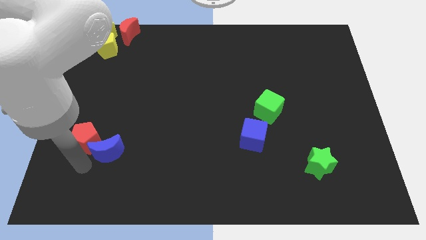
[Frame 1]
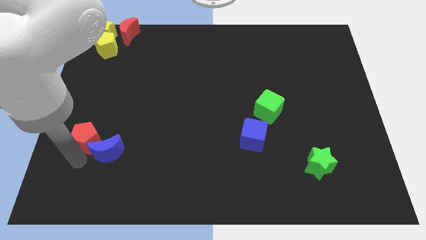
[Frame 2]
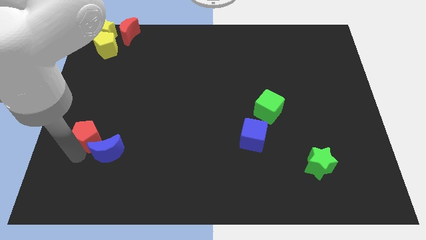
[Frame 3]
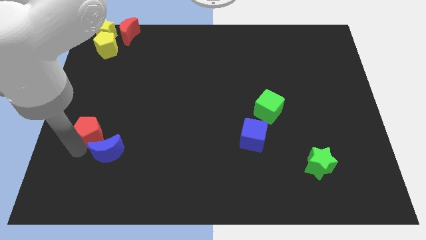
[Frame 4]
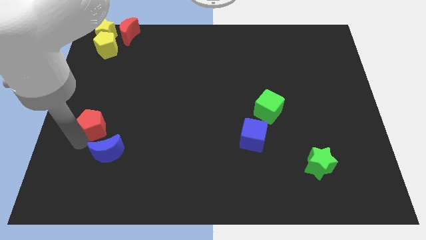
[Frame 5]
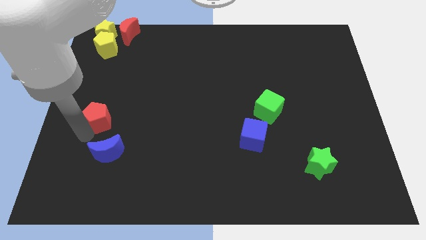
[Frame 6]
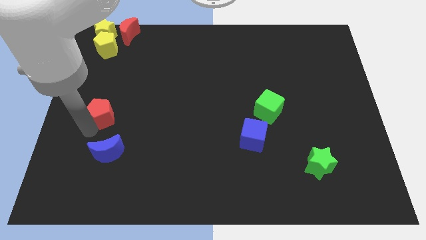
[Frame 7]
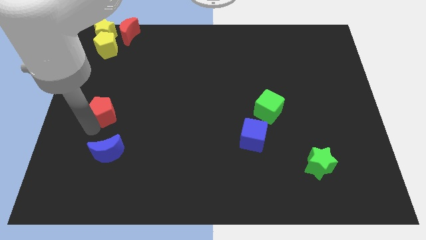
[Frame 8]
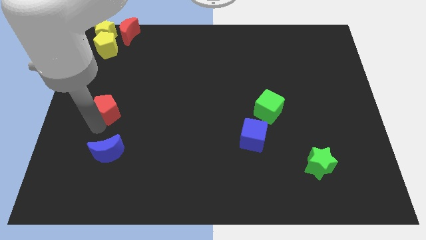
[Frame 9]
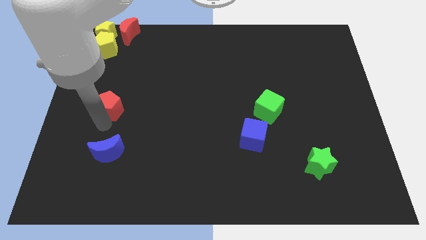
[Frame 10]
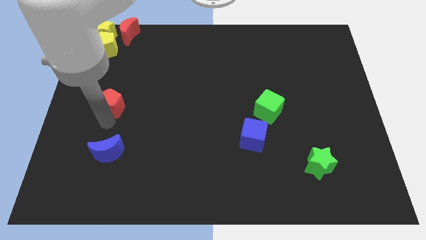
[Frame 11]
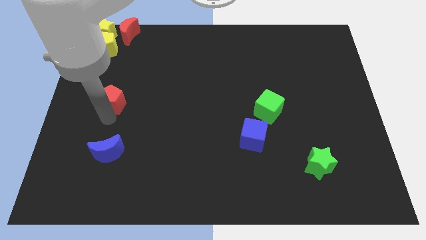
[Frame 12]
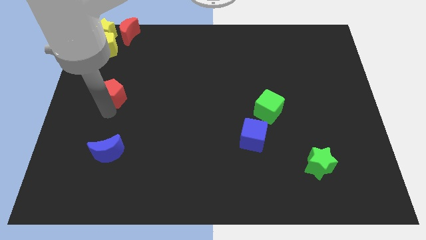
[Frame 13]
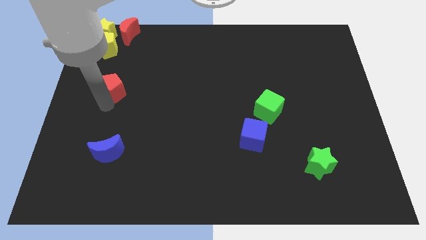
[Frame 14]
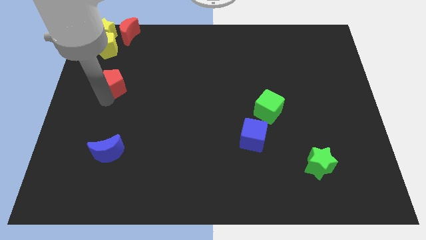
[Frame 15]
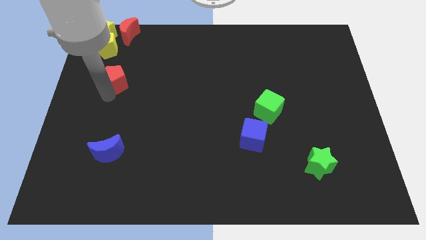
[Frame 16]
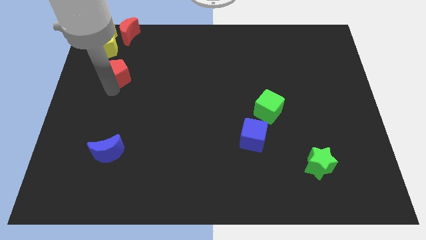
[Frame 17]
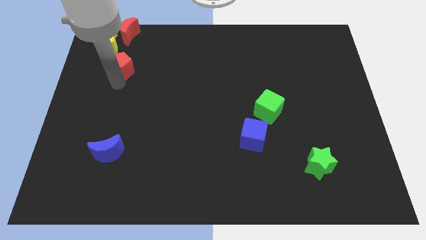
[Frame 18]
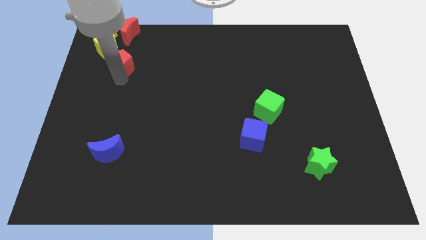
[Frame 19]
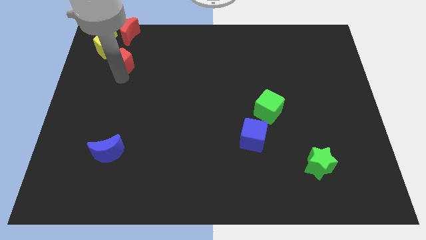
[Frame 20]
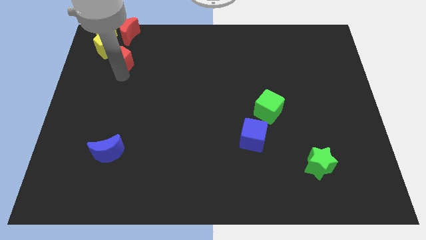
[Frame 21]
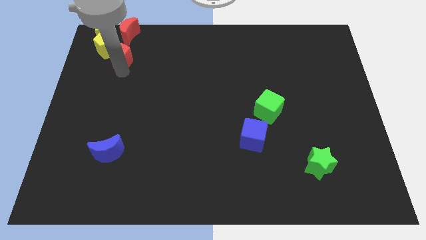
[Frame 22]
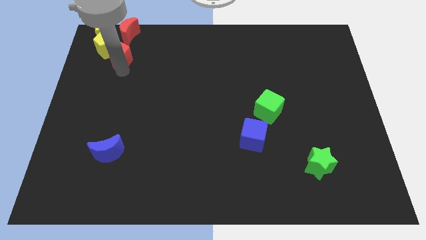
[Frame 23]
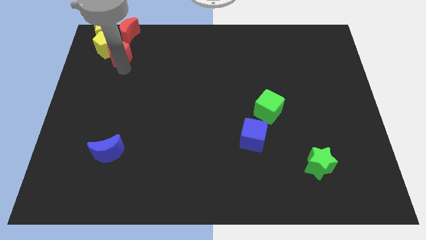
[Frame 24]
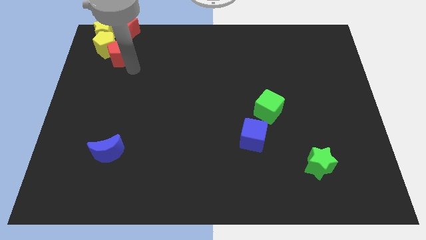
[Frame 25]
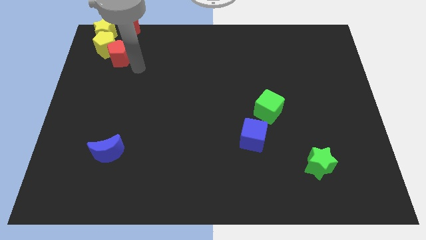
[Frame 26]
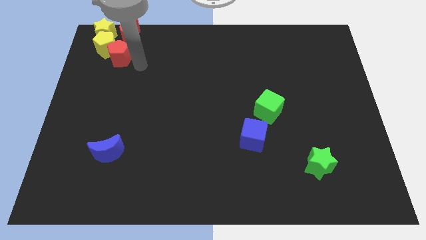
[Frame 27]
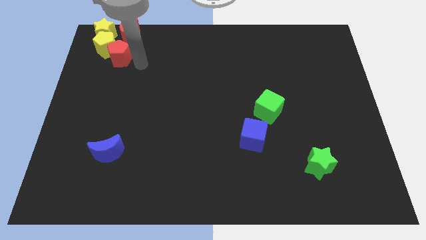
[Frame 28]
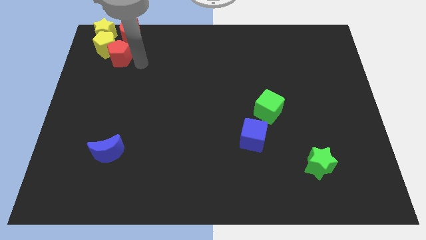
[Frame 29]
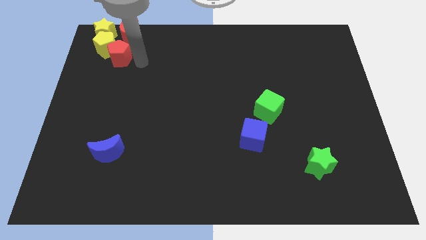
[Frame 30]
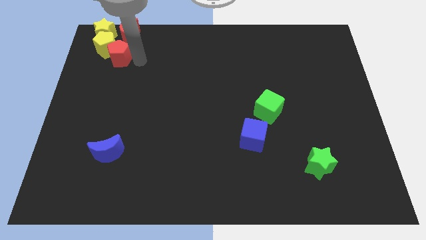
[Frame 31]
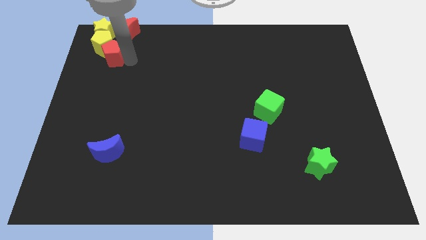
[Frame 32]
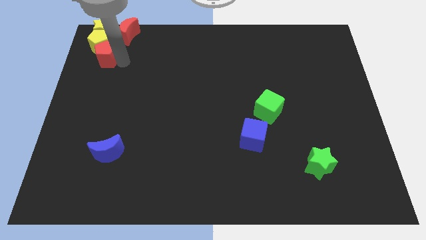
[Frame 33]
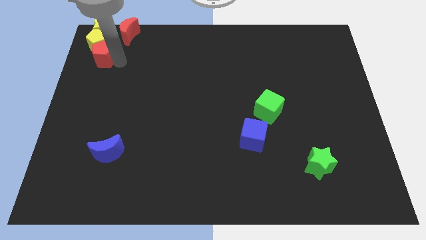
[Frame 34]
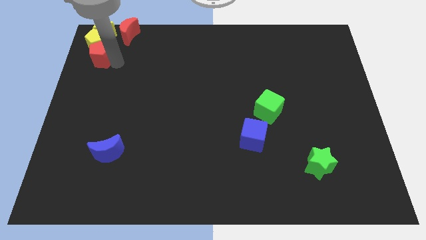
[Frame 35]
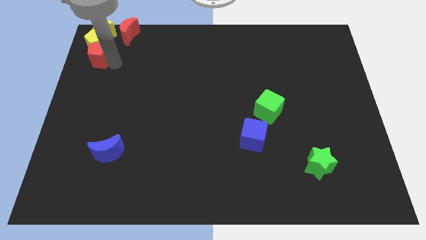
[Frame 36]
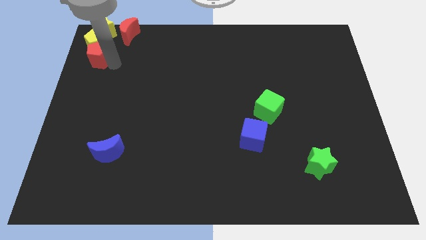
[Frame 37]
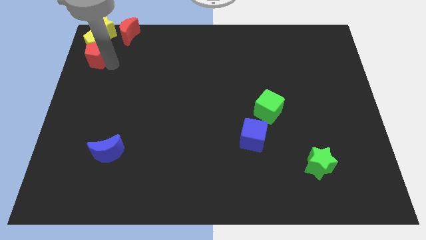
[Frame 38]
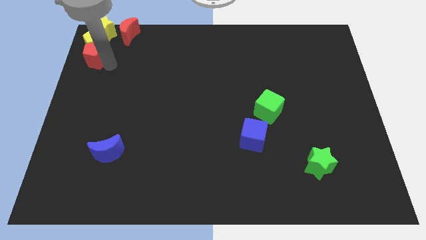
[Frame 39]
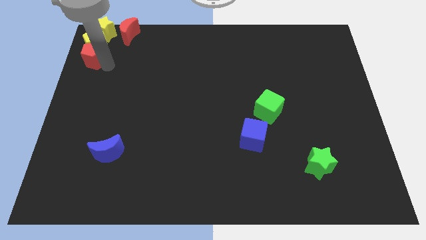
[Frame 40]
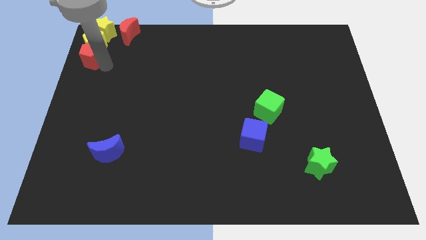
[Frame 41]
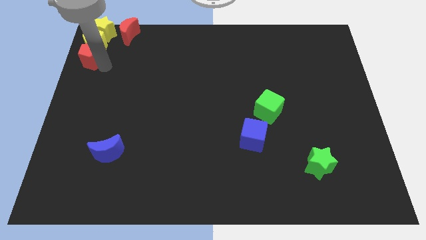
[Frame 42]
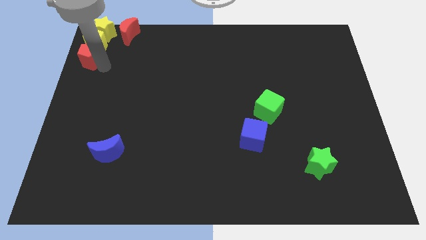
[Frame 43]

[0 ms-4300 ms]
push the red pentagon to the bottom side of the yellow pentagon

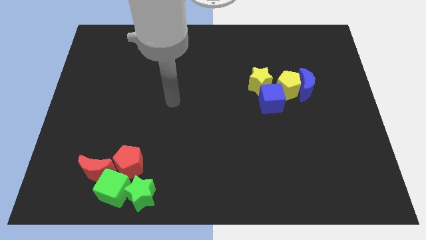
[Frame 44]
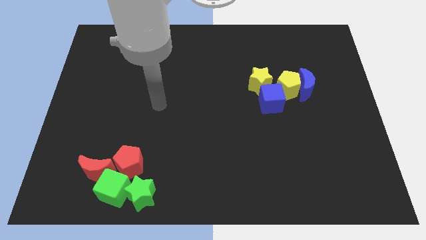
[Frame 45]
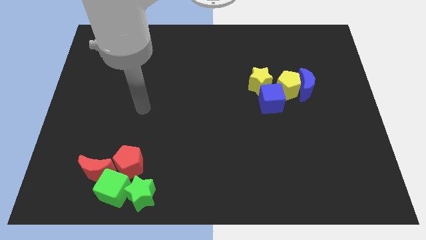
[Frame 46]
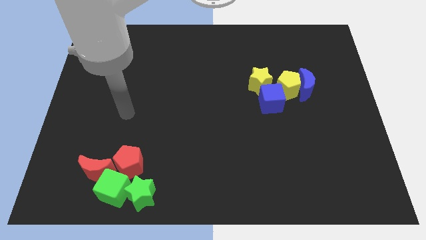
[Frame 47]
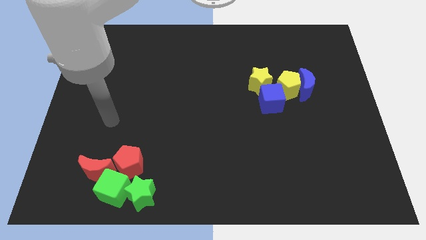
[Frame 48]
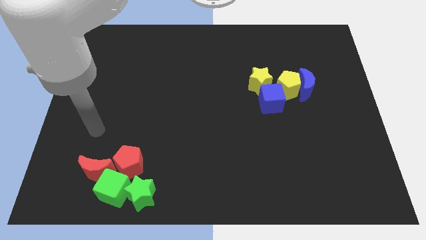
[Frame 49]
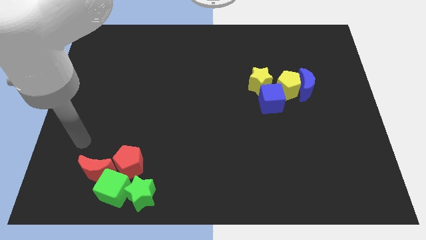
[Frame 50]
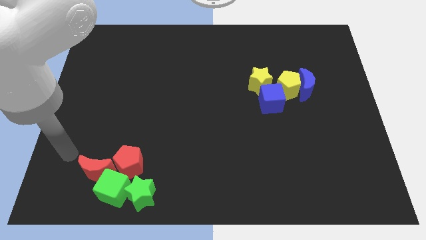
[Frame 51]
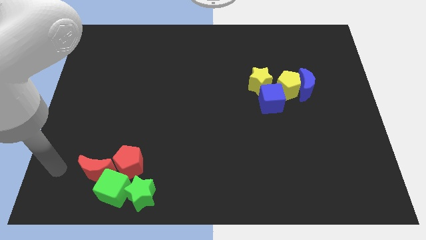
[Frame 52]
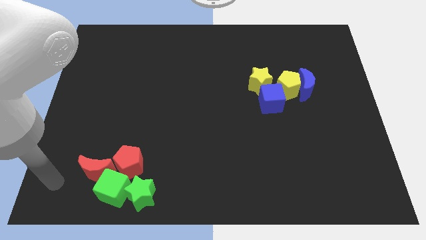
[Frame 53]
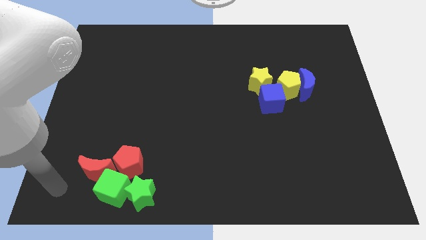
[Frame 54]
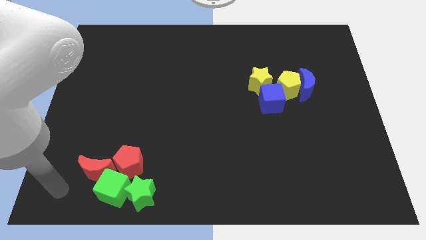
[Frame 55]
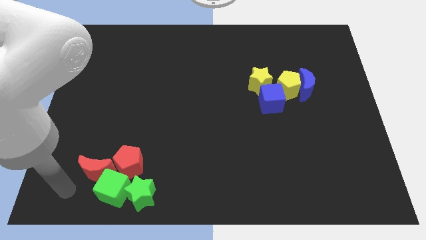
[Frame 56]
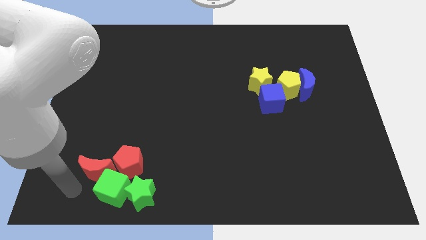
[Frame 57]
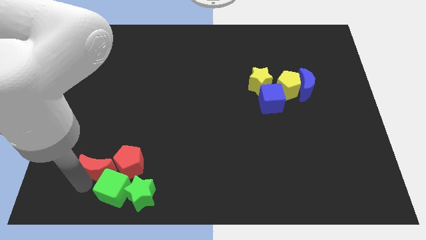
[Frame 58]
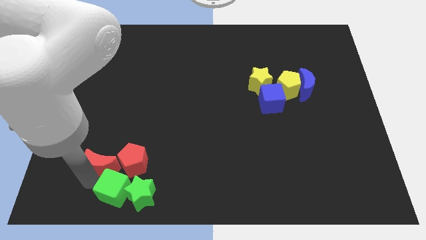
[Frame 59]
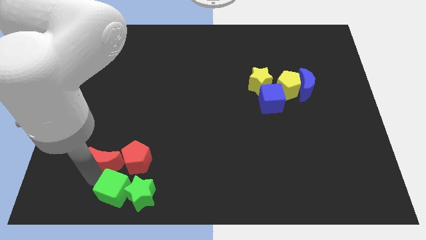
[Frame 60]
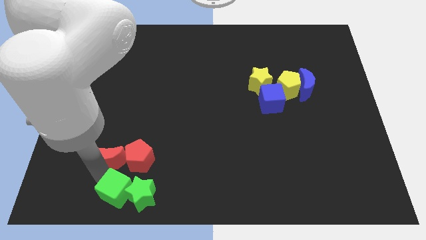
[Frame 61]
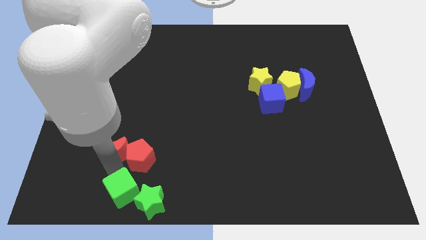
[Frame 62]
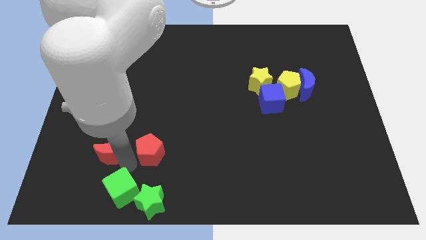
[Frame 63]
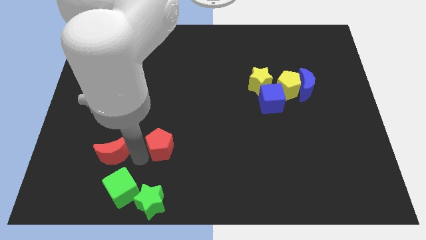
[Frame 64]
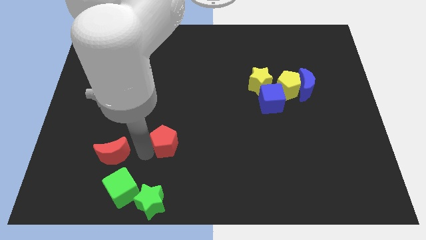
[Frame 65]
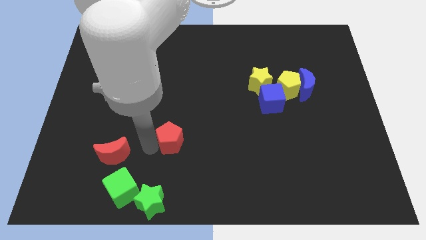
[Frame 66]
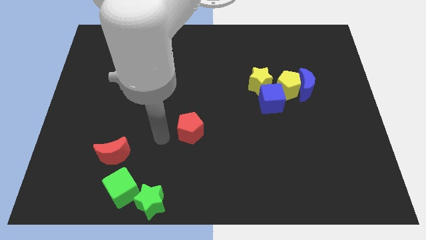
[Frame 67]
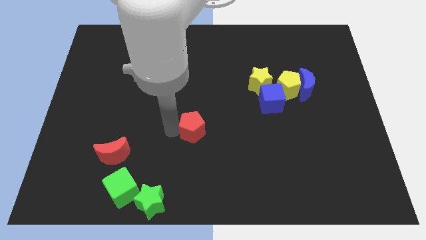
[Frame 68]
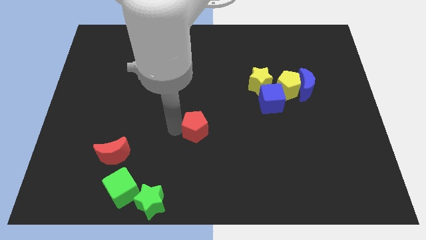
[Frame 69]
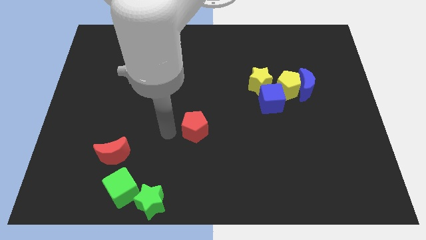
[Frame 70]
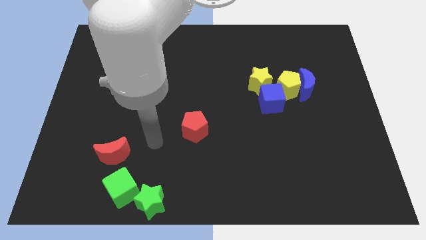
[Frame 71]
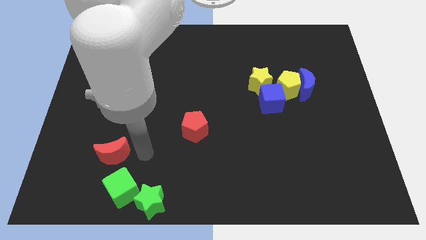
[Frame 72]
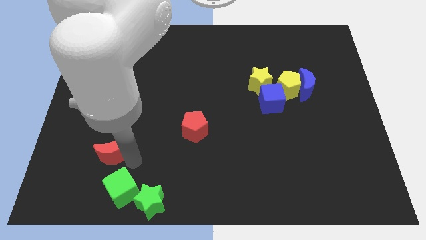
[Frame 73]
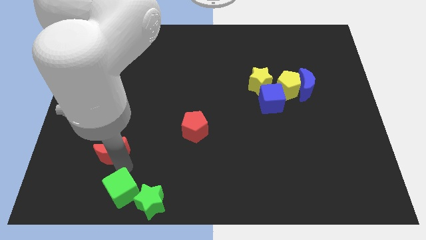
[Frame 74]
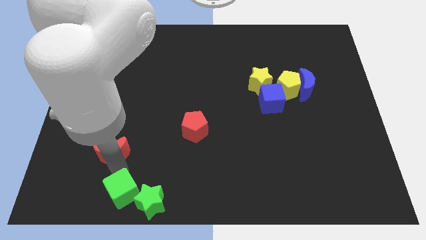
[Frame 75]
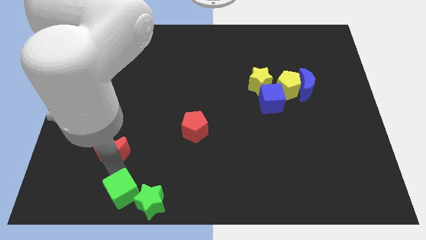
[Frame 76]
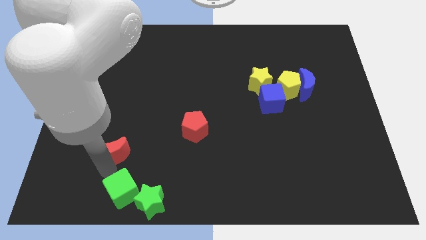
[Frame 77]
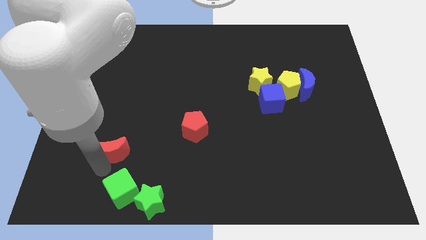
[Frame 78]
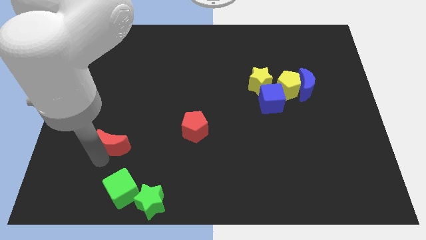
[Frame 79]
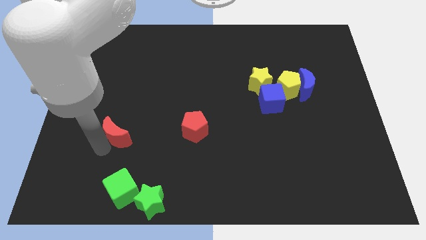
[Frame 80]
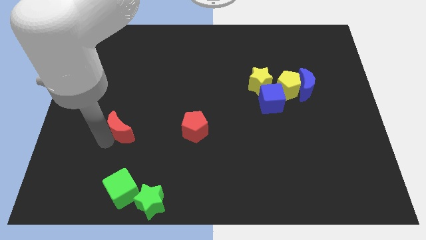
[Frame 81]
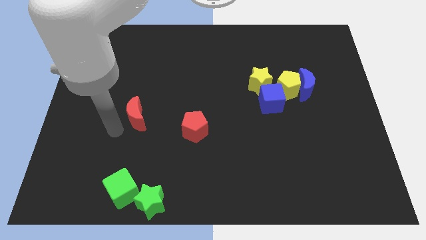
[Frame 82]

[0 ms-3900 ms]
separate the red blocks from the green blocks

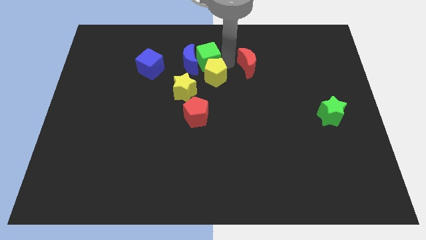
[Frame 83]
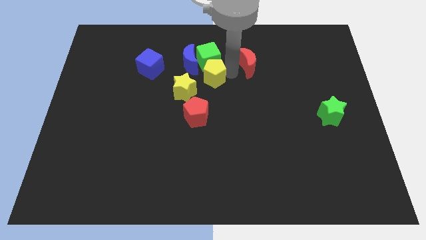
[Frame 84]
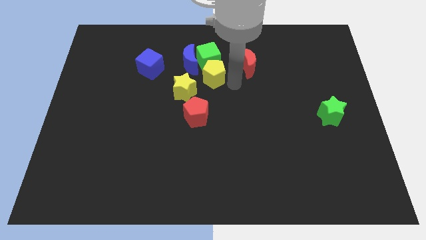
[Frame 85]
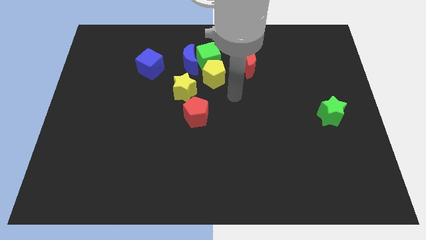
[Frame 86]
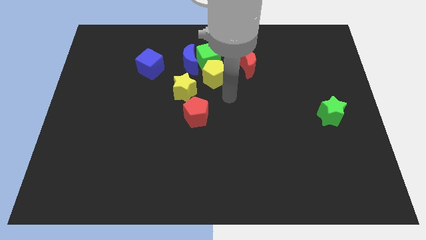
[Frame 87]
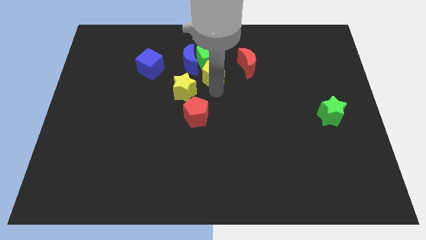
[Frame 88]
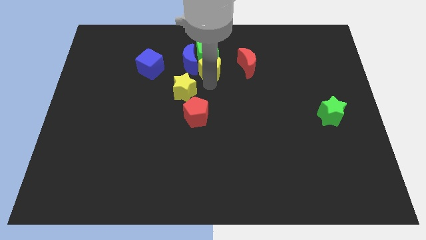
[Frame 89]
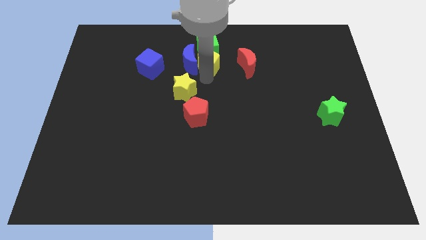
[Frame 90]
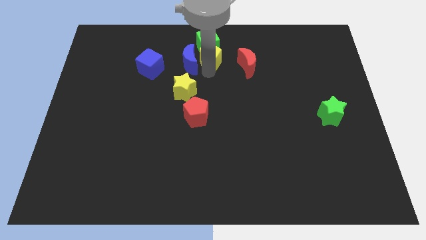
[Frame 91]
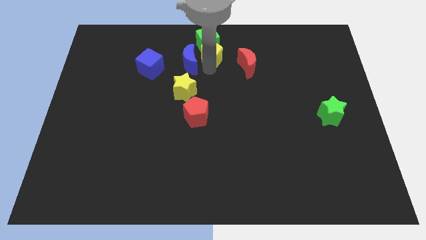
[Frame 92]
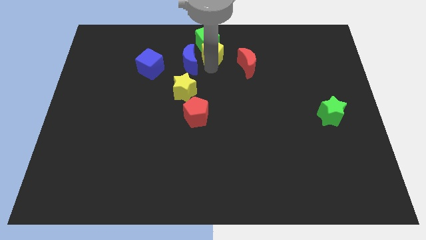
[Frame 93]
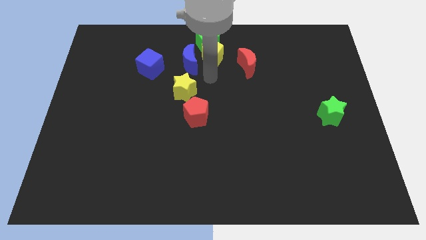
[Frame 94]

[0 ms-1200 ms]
slide the green cube and yellow pentagon towards the top center of the board
